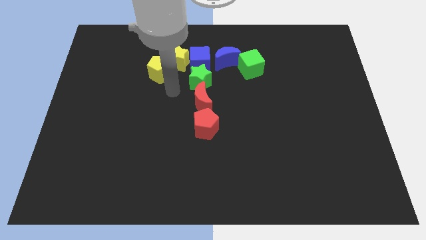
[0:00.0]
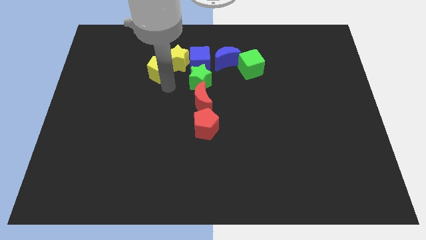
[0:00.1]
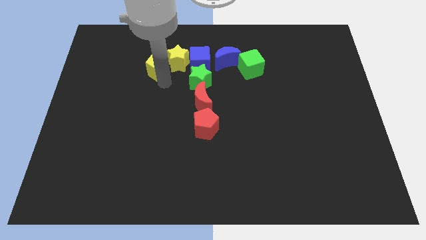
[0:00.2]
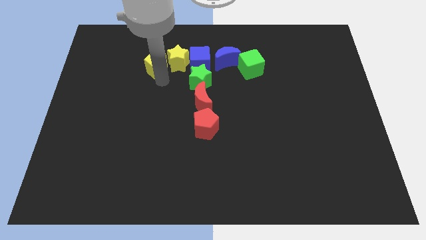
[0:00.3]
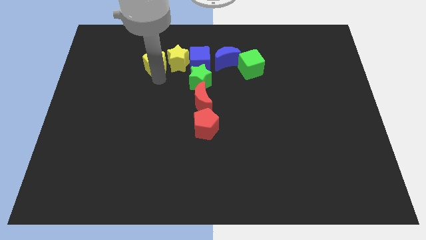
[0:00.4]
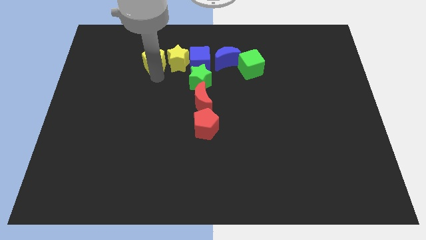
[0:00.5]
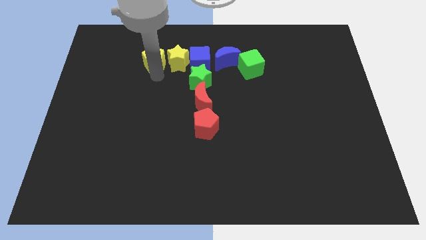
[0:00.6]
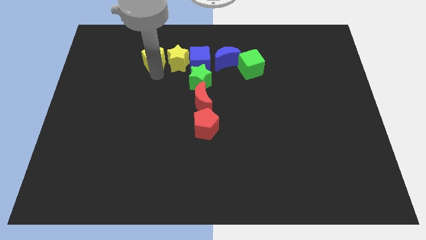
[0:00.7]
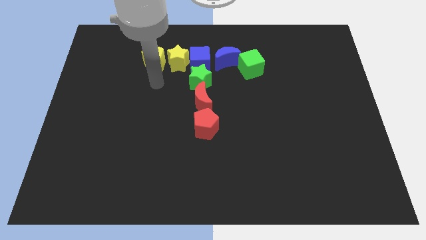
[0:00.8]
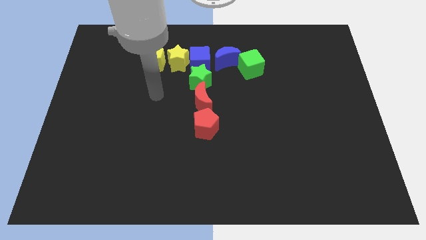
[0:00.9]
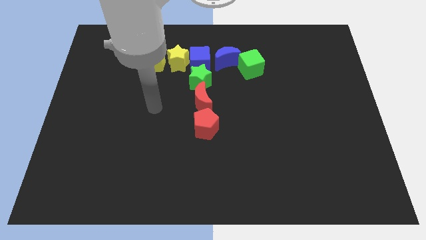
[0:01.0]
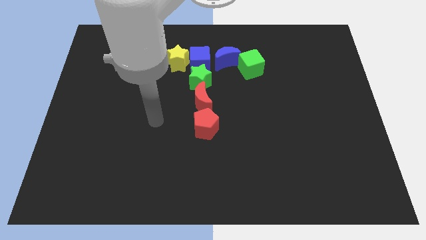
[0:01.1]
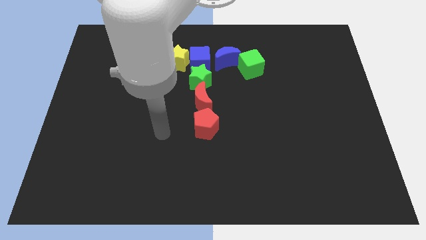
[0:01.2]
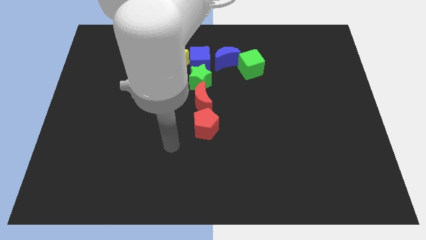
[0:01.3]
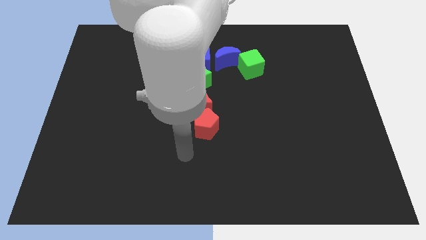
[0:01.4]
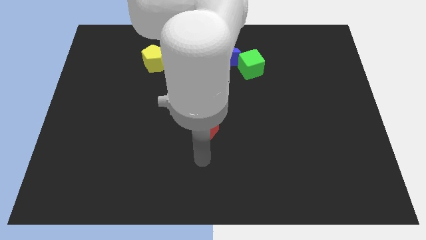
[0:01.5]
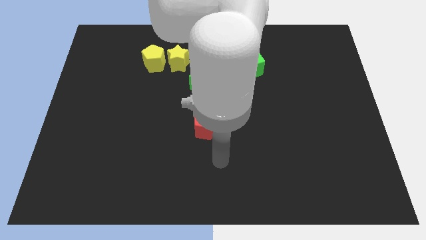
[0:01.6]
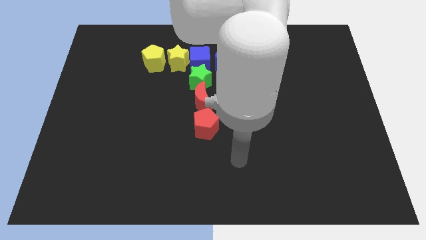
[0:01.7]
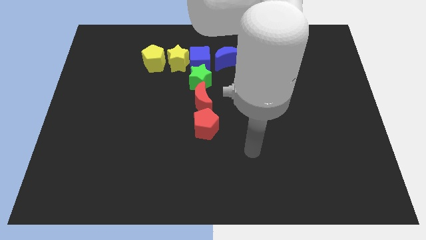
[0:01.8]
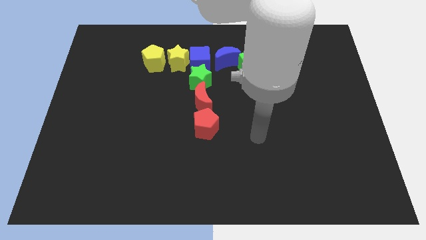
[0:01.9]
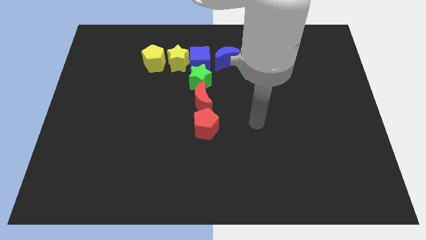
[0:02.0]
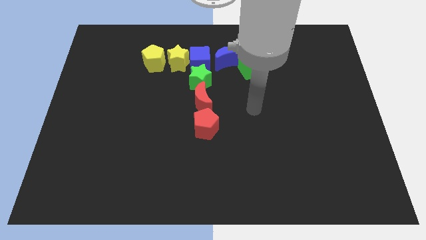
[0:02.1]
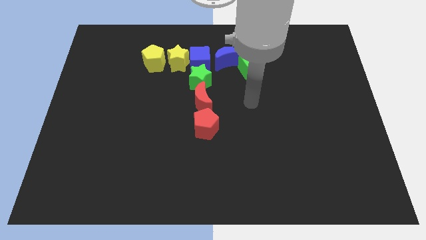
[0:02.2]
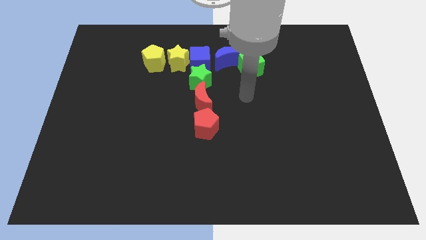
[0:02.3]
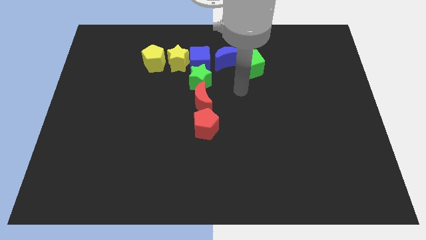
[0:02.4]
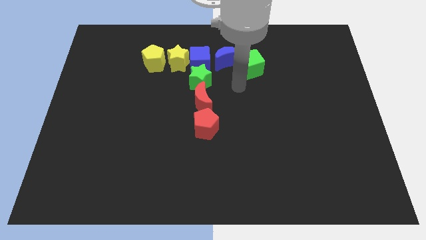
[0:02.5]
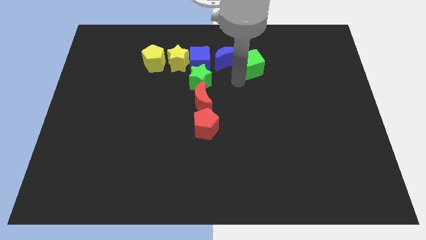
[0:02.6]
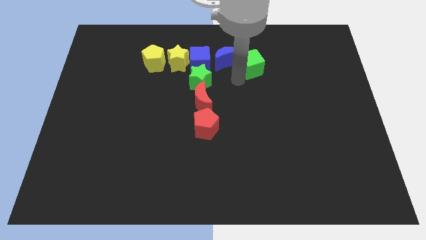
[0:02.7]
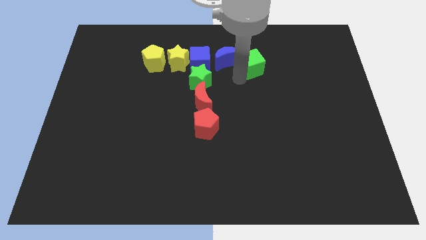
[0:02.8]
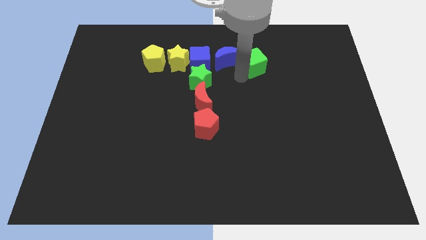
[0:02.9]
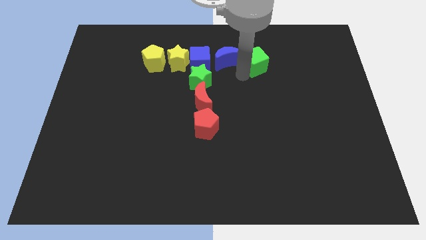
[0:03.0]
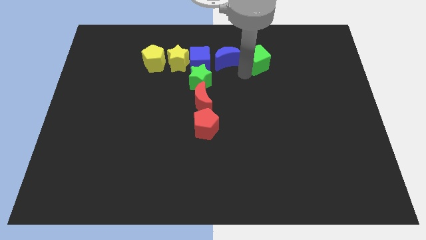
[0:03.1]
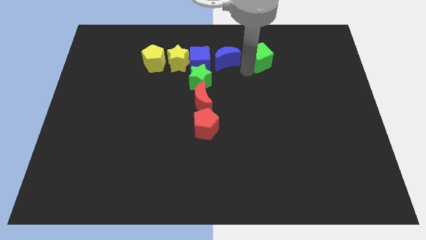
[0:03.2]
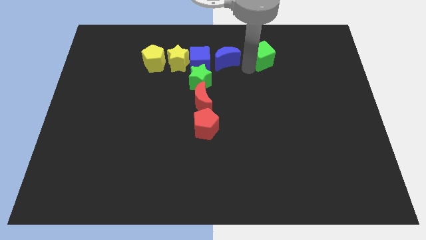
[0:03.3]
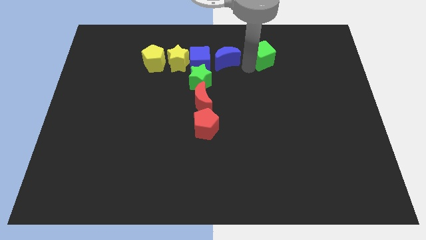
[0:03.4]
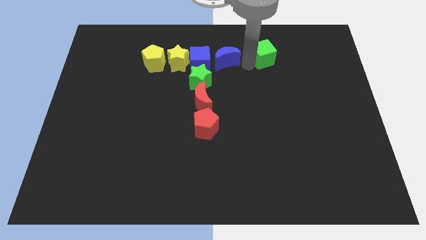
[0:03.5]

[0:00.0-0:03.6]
place the green cube to the right of the blue moon

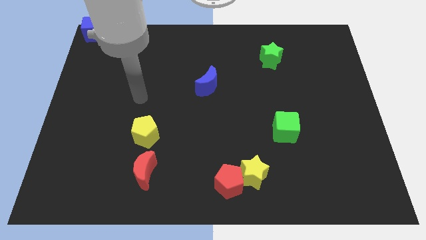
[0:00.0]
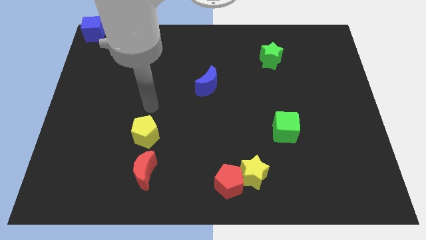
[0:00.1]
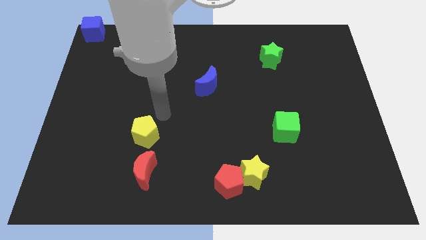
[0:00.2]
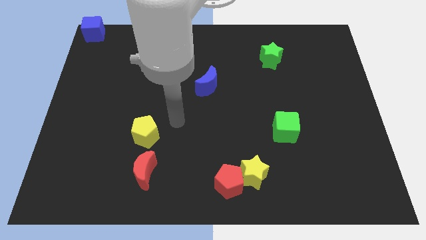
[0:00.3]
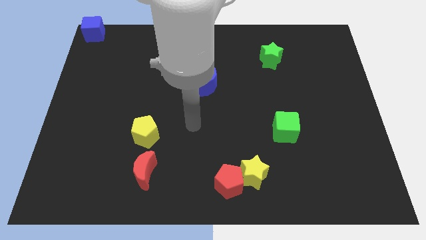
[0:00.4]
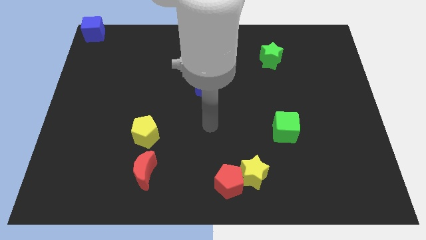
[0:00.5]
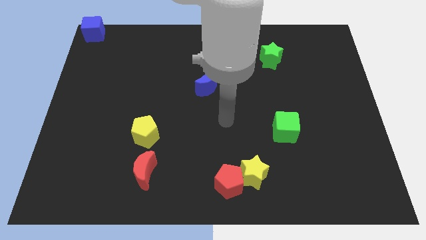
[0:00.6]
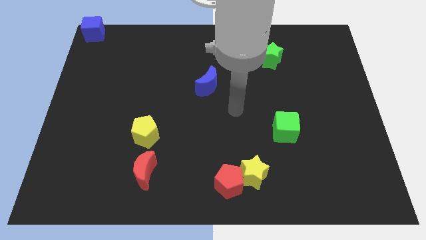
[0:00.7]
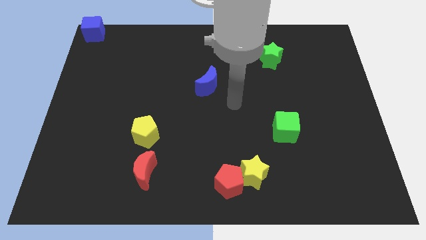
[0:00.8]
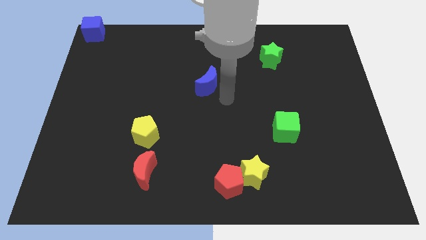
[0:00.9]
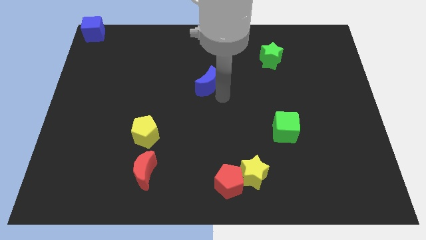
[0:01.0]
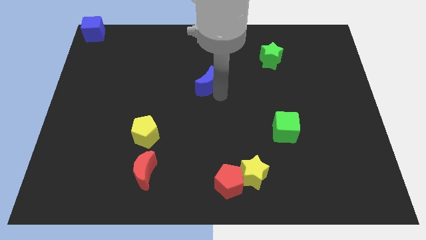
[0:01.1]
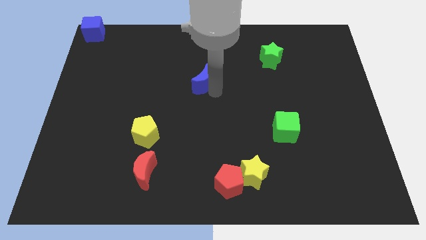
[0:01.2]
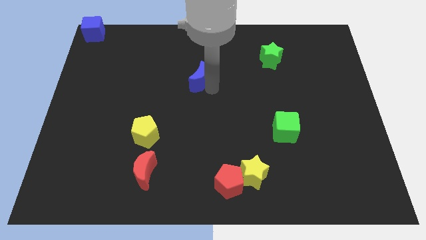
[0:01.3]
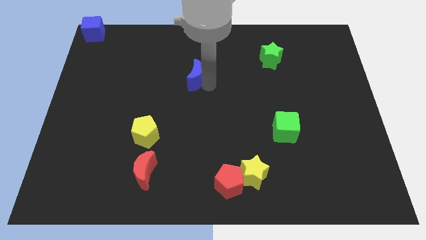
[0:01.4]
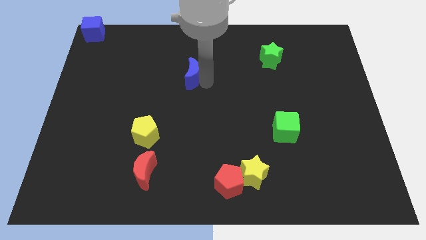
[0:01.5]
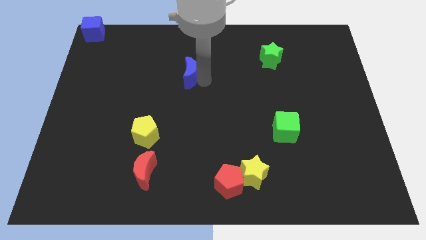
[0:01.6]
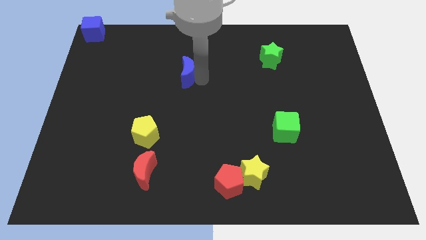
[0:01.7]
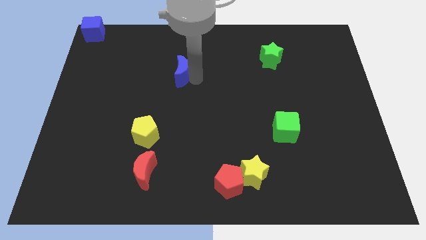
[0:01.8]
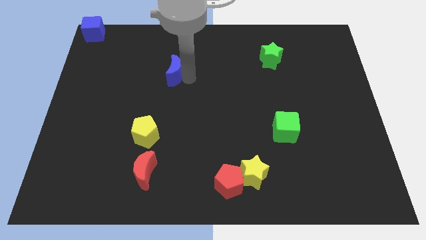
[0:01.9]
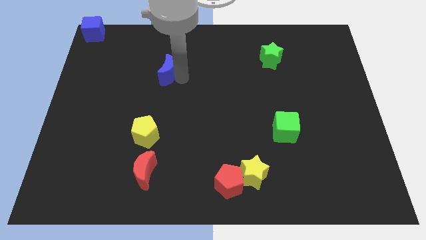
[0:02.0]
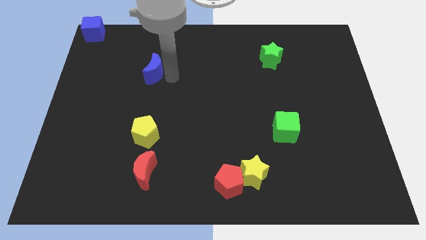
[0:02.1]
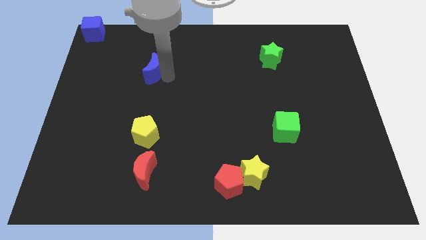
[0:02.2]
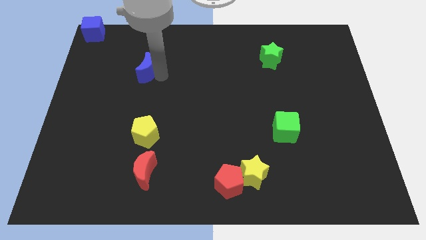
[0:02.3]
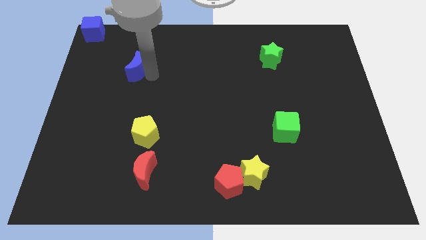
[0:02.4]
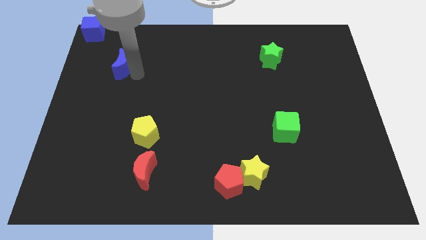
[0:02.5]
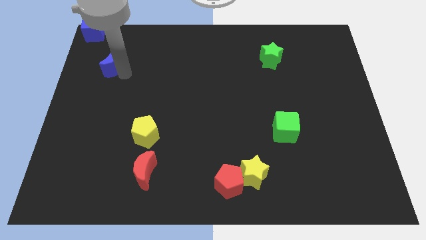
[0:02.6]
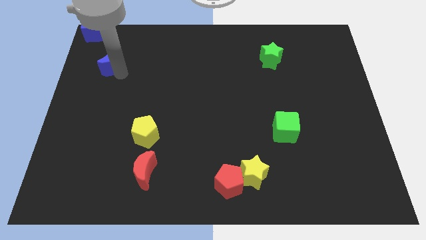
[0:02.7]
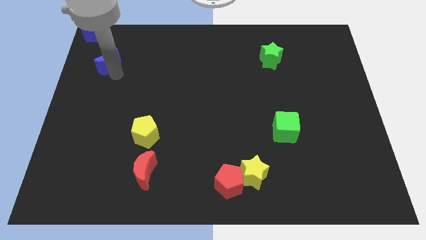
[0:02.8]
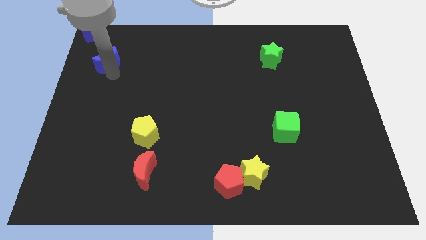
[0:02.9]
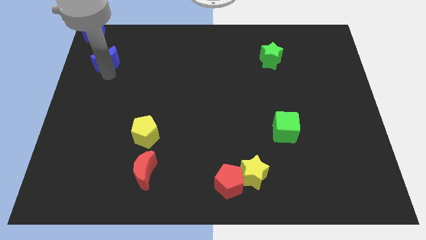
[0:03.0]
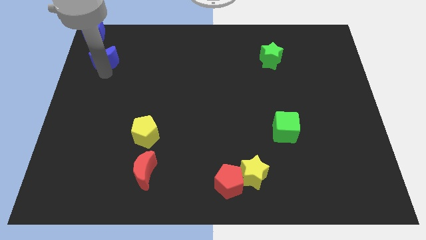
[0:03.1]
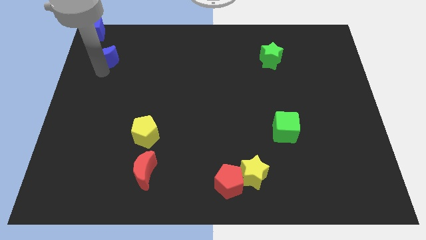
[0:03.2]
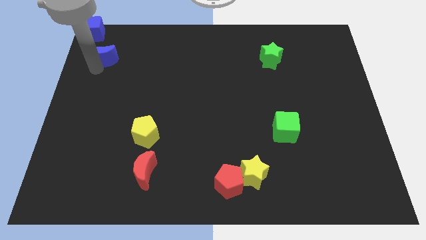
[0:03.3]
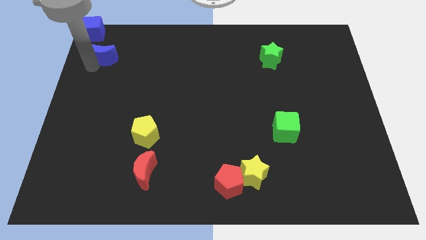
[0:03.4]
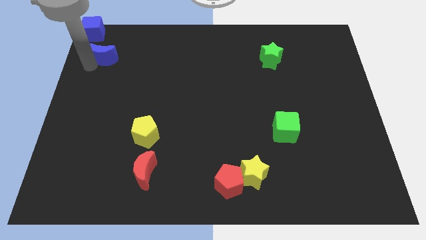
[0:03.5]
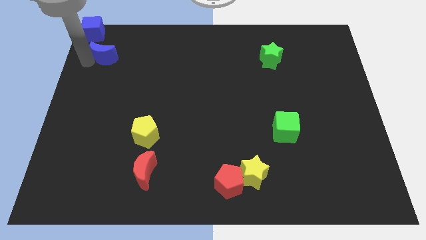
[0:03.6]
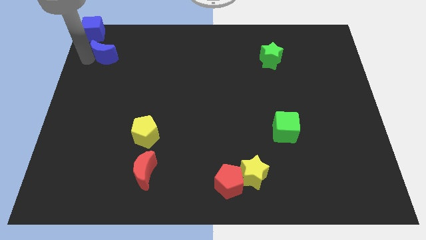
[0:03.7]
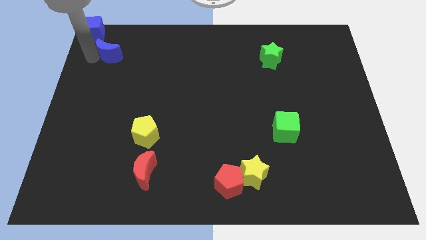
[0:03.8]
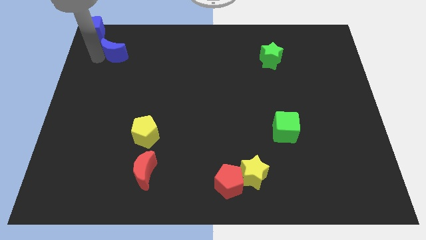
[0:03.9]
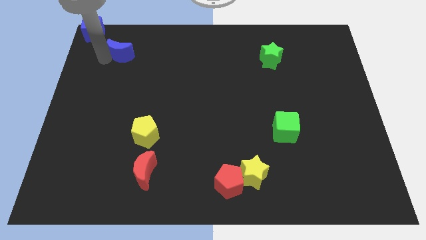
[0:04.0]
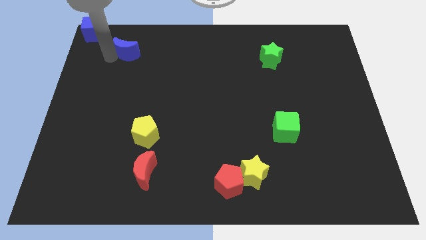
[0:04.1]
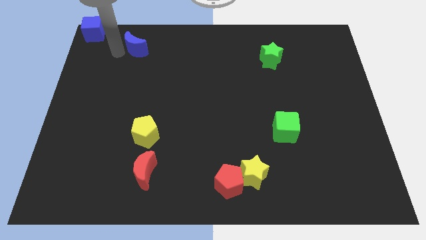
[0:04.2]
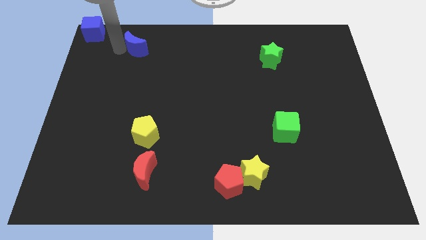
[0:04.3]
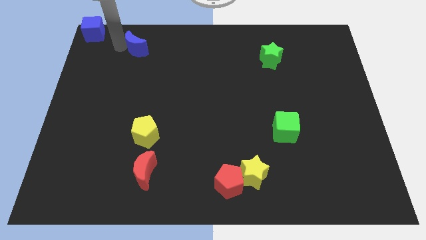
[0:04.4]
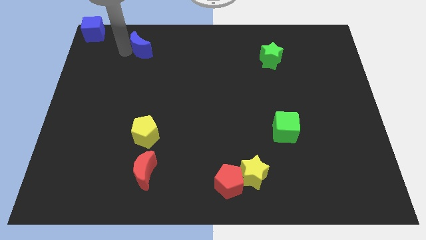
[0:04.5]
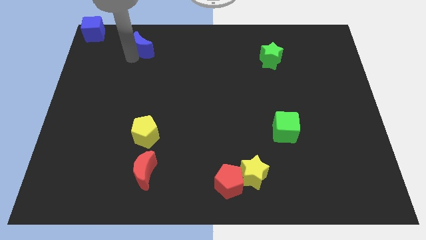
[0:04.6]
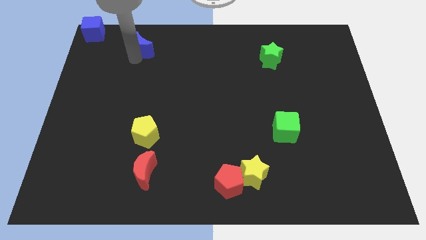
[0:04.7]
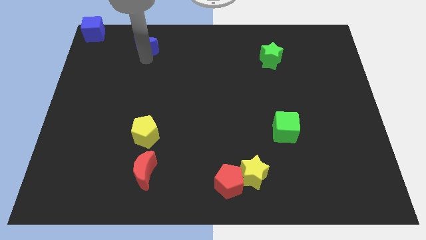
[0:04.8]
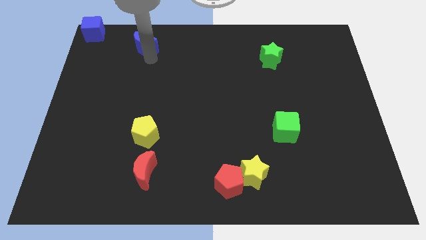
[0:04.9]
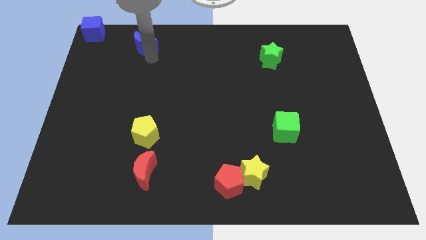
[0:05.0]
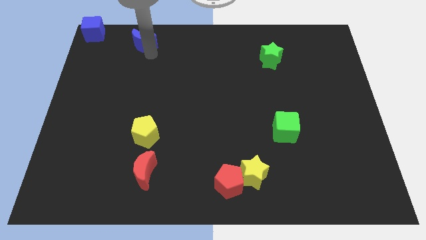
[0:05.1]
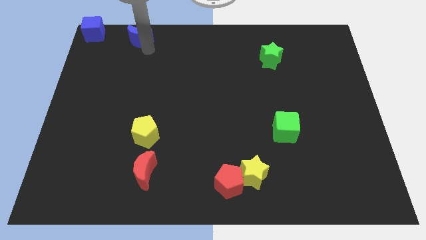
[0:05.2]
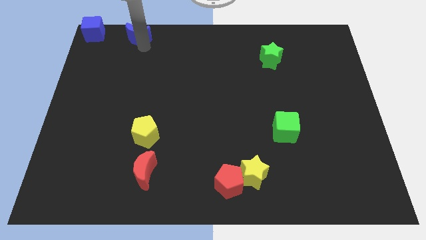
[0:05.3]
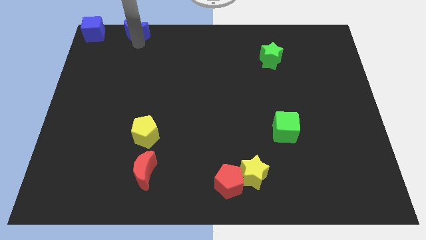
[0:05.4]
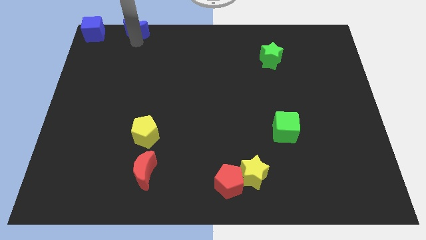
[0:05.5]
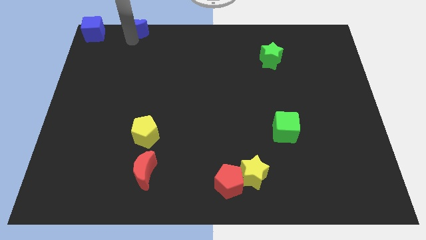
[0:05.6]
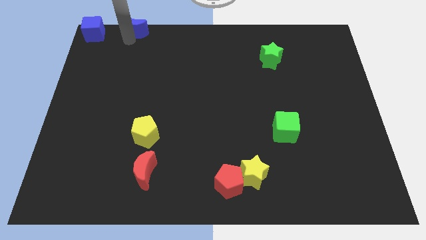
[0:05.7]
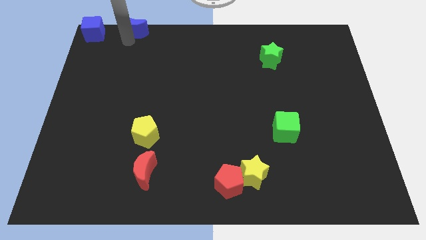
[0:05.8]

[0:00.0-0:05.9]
place the blue crescent above the yellow pentagon
